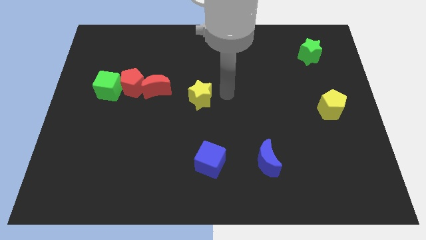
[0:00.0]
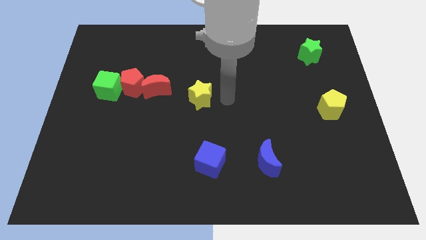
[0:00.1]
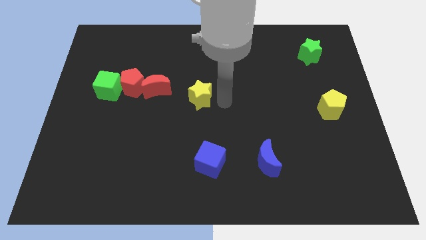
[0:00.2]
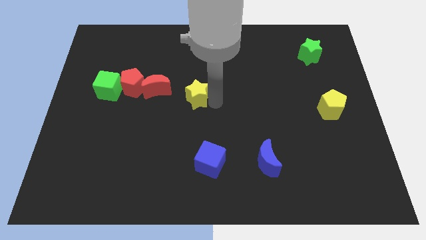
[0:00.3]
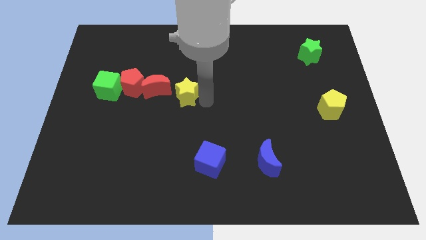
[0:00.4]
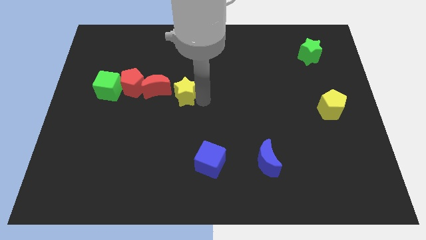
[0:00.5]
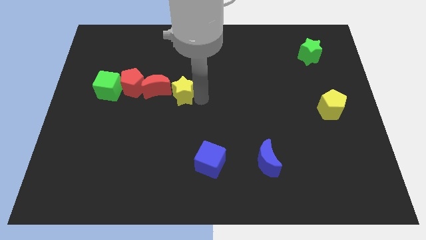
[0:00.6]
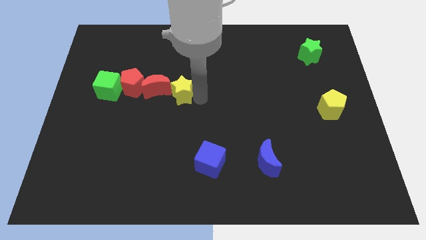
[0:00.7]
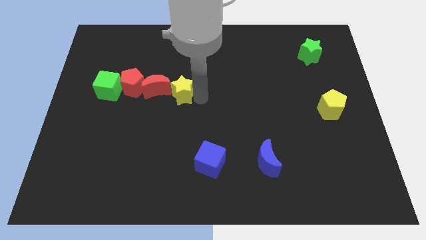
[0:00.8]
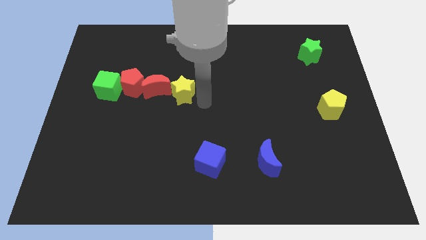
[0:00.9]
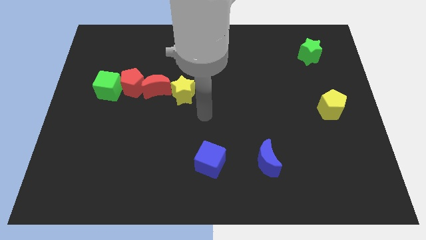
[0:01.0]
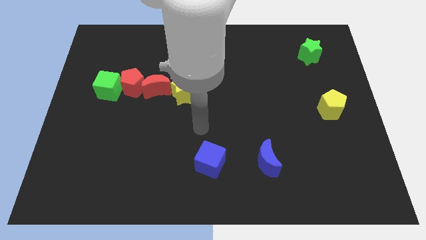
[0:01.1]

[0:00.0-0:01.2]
push the yellow star right to the red moon

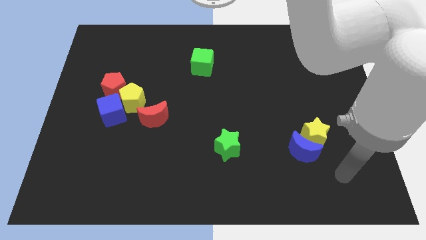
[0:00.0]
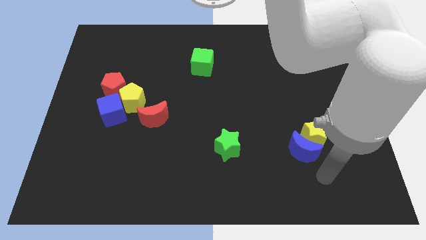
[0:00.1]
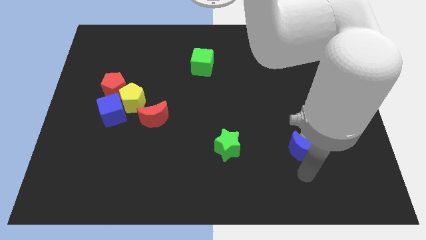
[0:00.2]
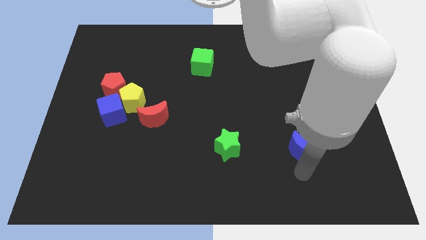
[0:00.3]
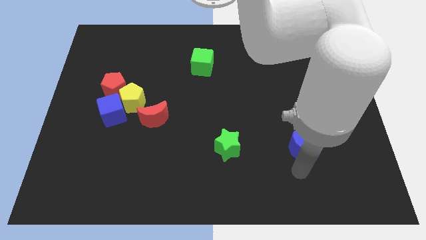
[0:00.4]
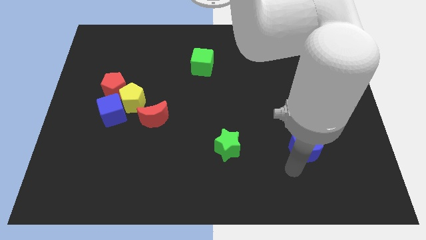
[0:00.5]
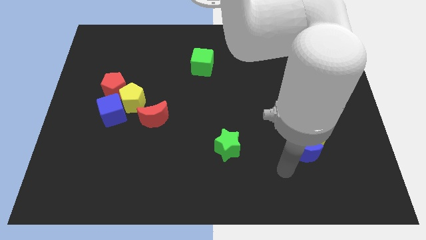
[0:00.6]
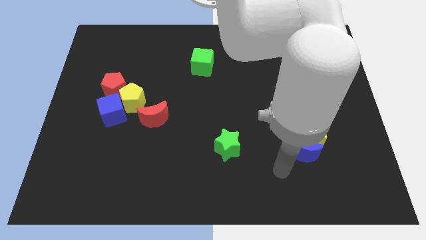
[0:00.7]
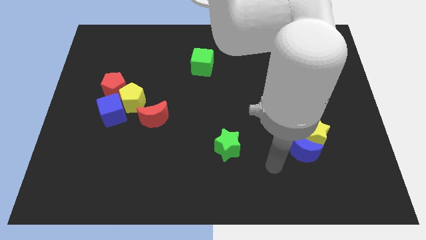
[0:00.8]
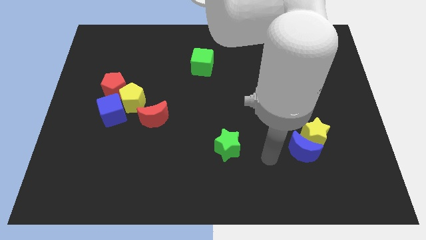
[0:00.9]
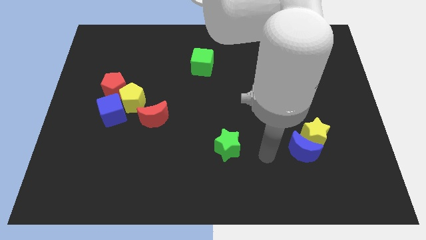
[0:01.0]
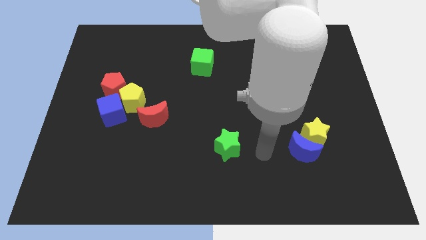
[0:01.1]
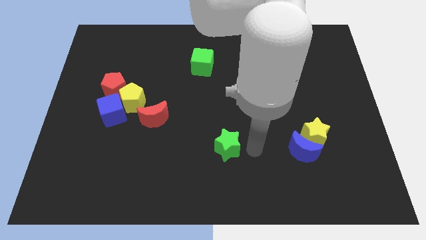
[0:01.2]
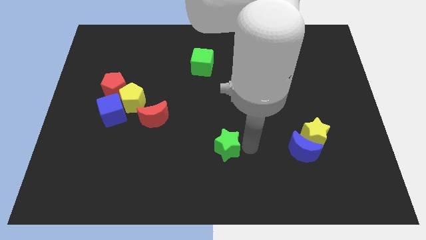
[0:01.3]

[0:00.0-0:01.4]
place the arm to the right of the green star

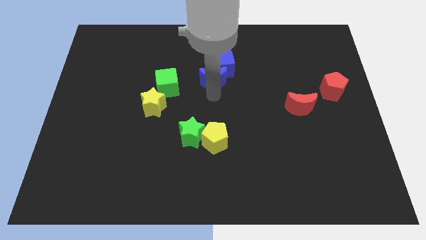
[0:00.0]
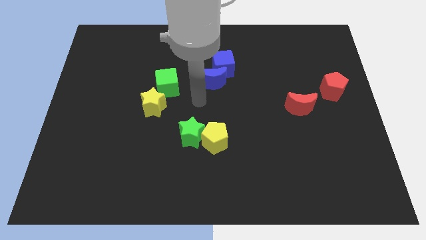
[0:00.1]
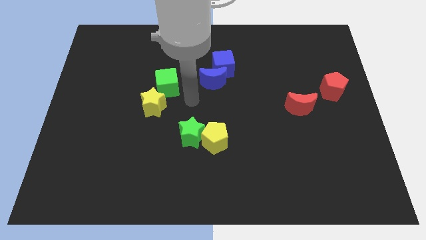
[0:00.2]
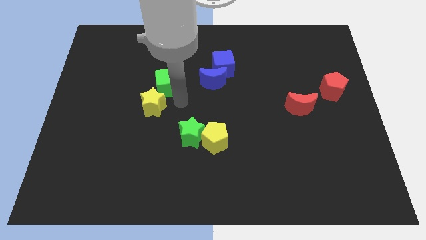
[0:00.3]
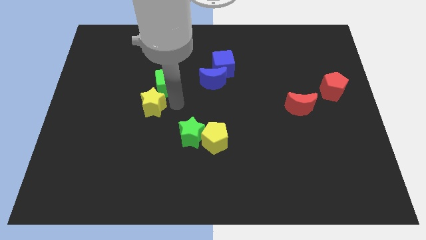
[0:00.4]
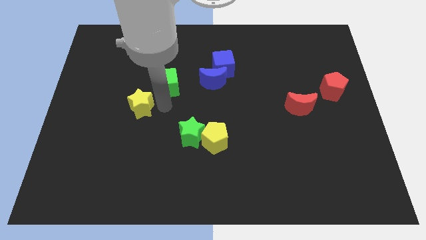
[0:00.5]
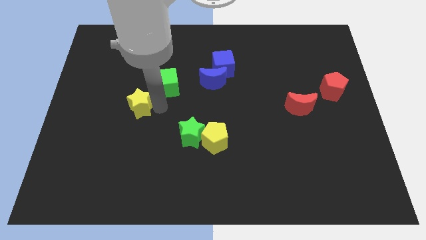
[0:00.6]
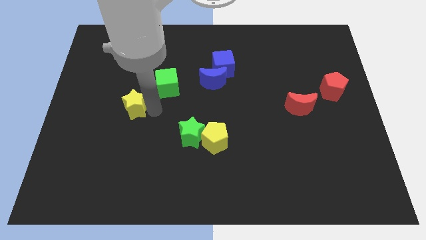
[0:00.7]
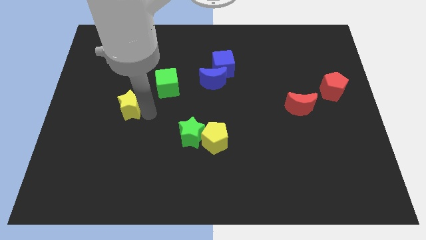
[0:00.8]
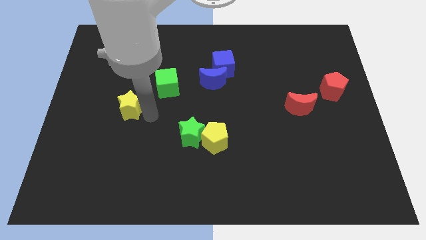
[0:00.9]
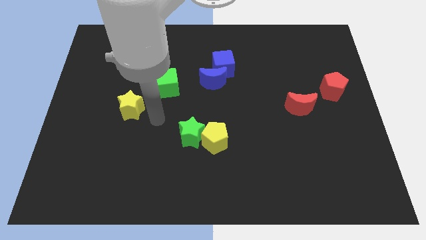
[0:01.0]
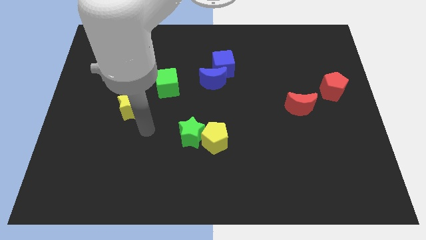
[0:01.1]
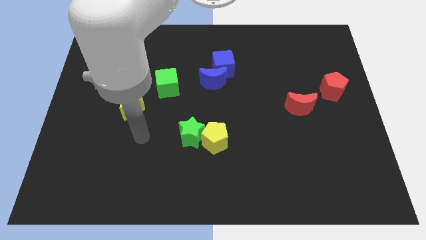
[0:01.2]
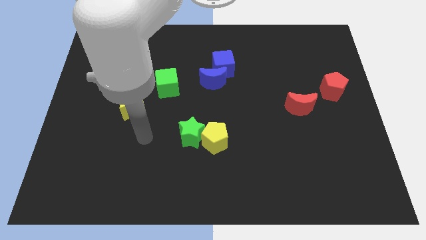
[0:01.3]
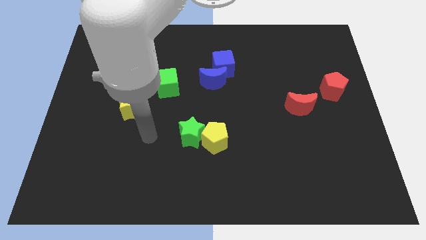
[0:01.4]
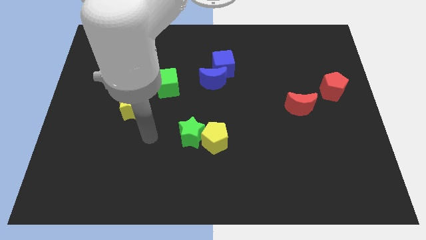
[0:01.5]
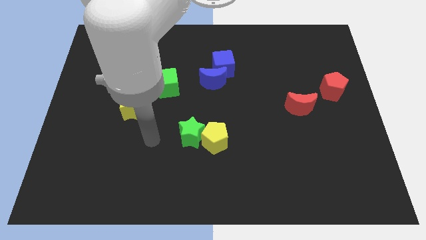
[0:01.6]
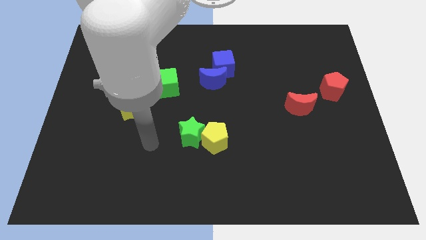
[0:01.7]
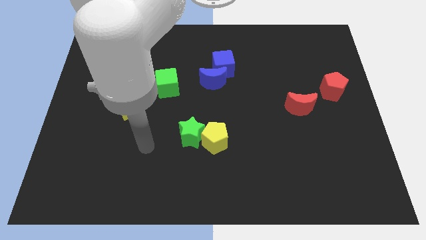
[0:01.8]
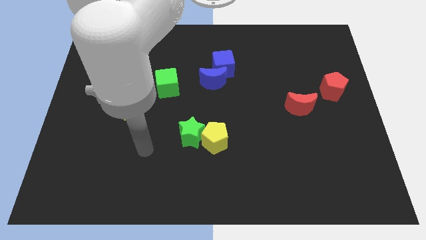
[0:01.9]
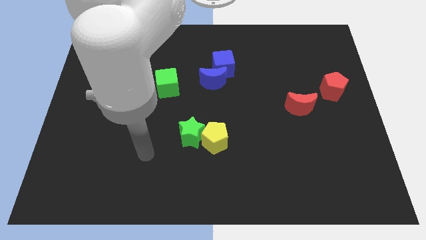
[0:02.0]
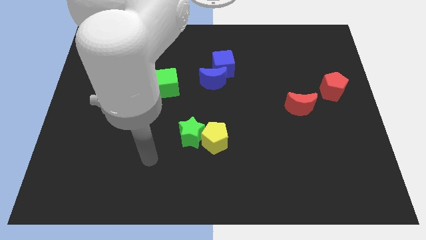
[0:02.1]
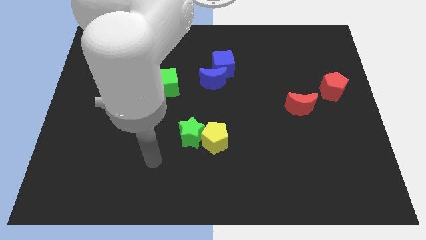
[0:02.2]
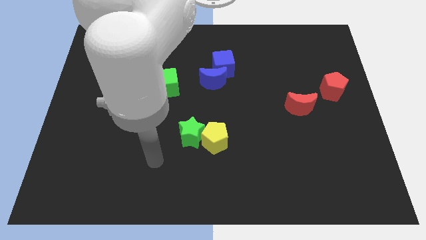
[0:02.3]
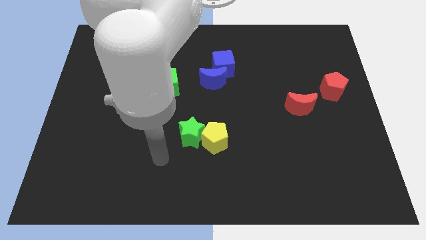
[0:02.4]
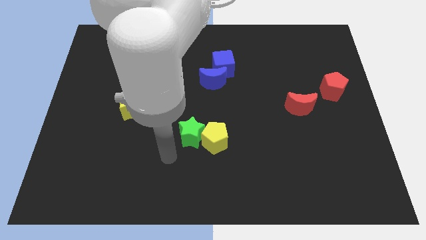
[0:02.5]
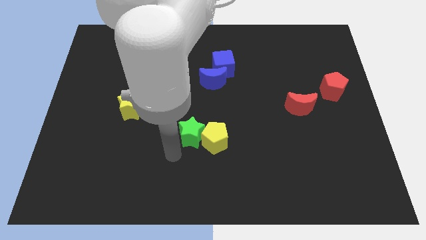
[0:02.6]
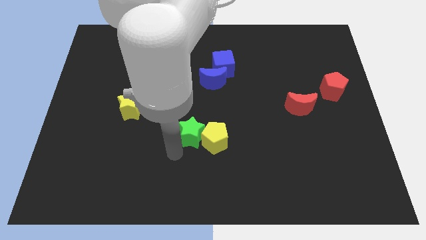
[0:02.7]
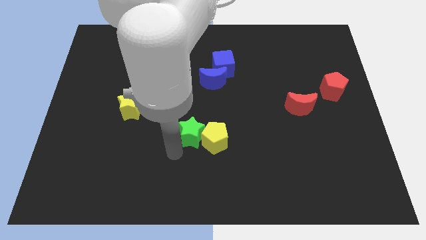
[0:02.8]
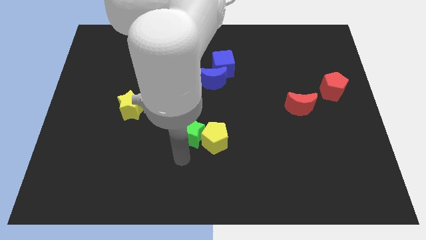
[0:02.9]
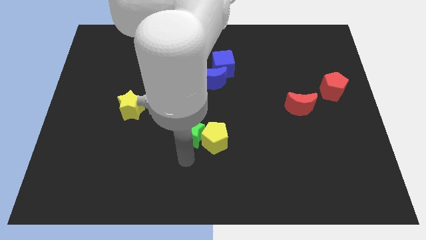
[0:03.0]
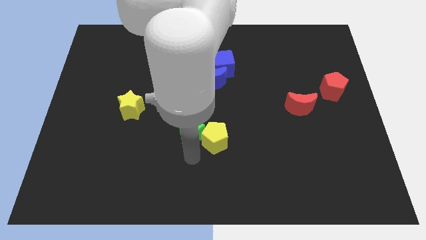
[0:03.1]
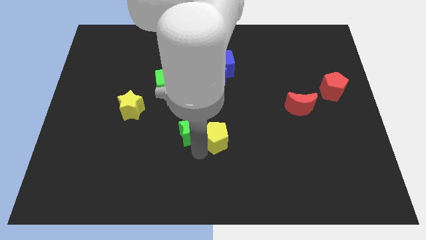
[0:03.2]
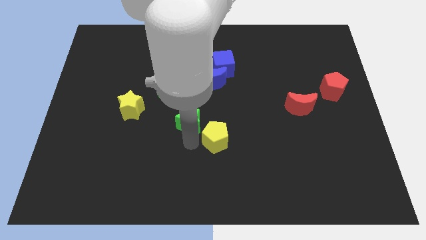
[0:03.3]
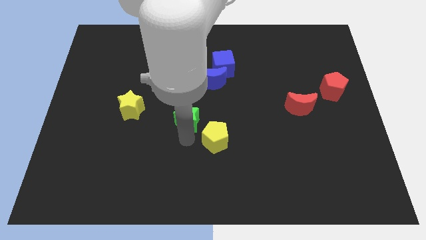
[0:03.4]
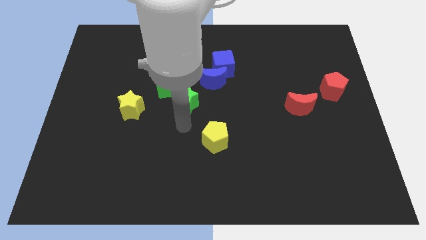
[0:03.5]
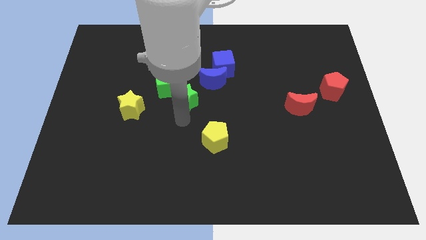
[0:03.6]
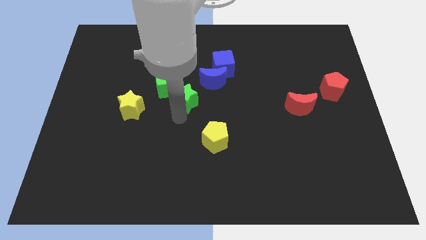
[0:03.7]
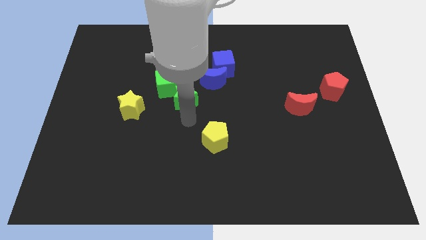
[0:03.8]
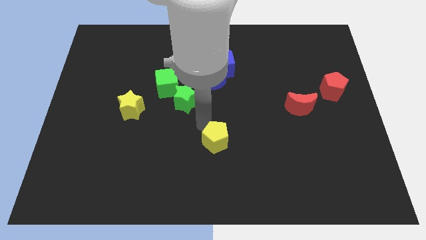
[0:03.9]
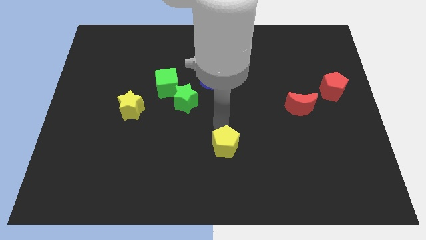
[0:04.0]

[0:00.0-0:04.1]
separate the green star and the yellow pentagon

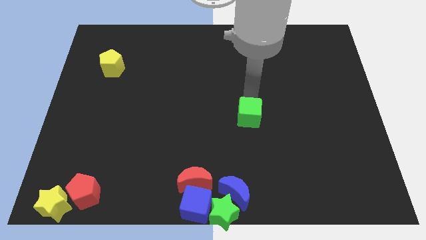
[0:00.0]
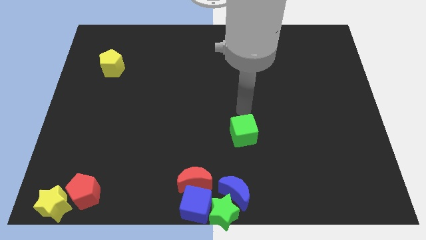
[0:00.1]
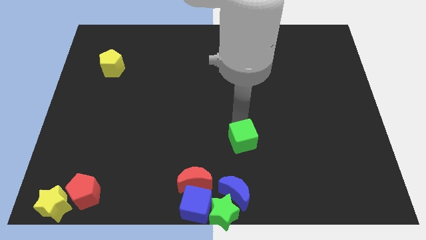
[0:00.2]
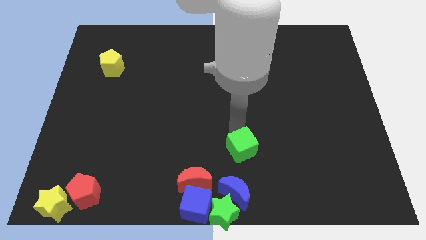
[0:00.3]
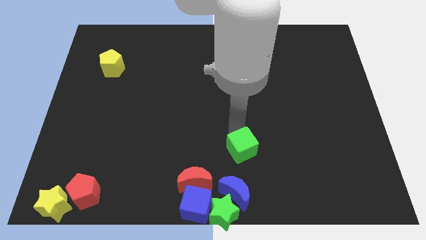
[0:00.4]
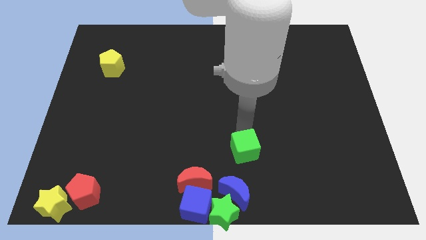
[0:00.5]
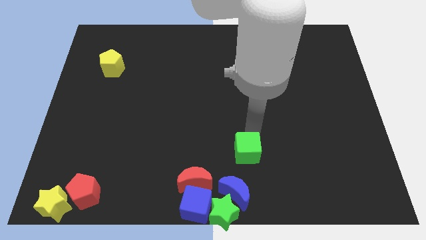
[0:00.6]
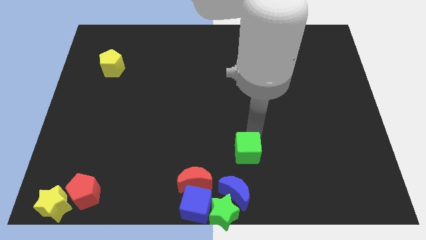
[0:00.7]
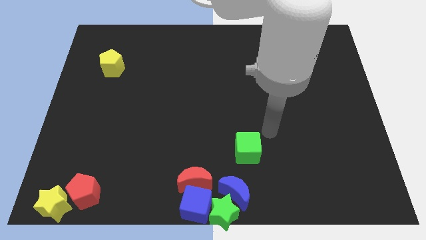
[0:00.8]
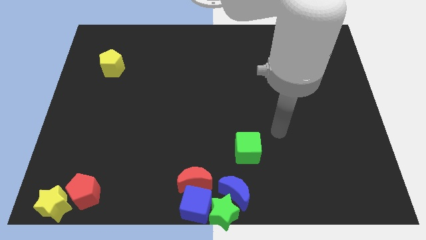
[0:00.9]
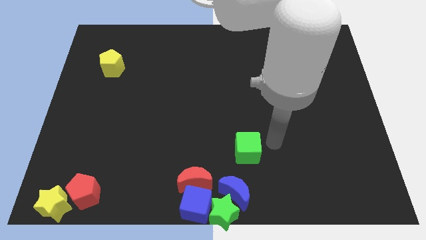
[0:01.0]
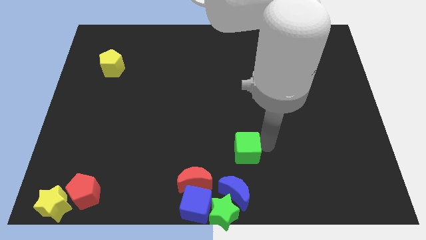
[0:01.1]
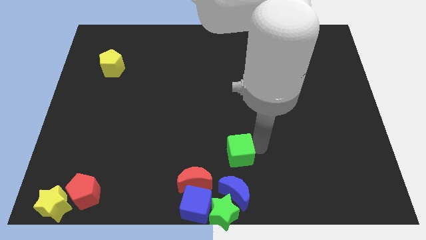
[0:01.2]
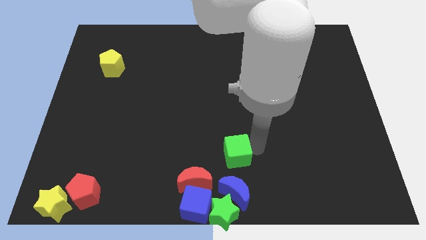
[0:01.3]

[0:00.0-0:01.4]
place the green cube diagonally top right to blue moon

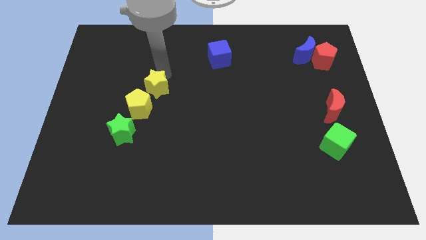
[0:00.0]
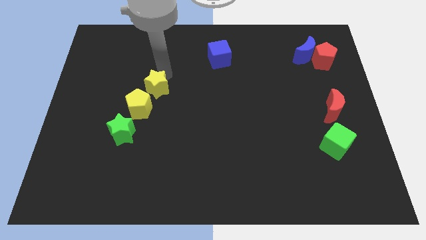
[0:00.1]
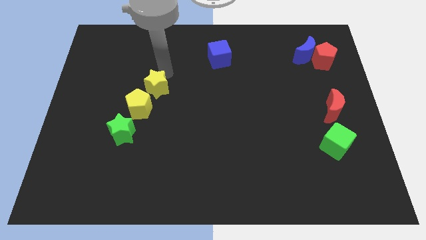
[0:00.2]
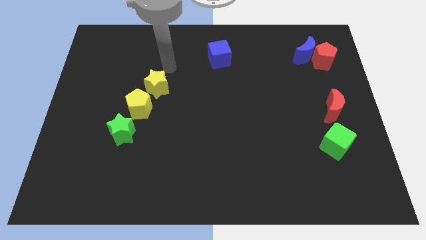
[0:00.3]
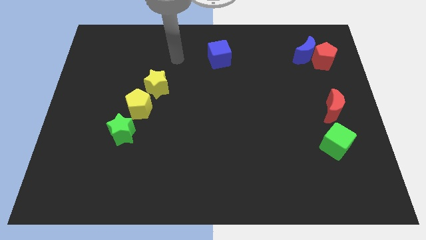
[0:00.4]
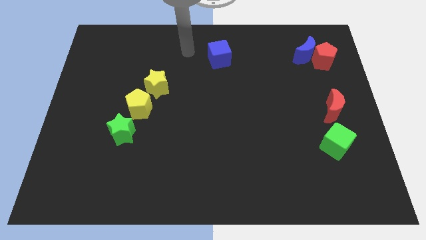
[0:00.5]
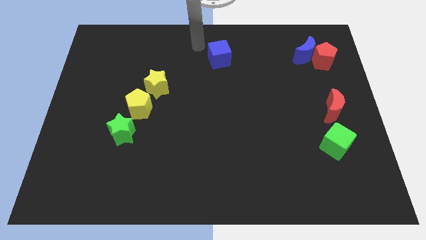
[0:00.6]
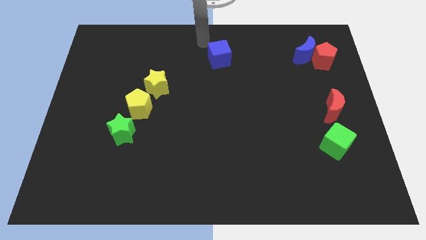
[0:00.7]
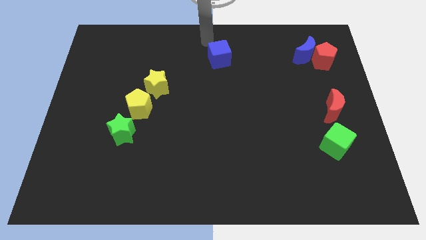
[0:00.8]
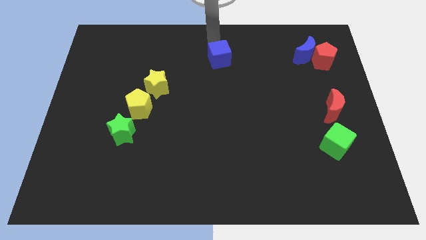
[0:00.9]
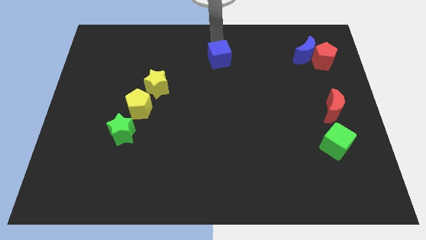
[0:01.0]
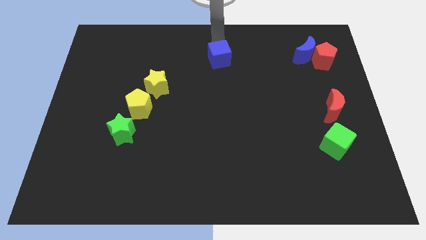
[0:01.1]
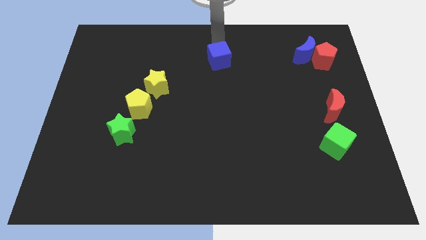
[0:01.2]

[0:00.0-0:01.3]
tap the blue cube
